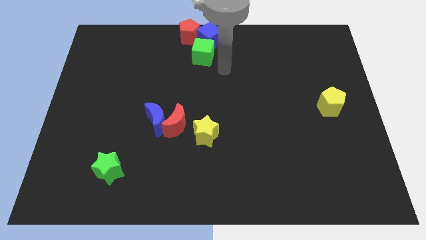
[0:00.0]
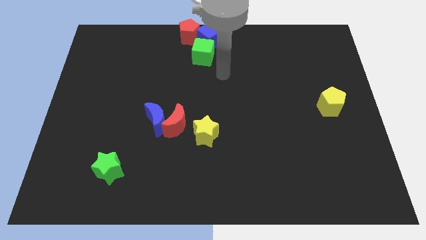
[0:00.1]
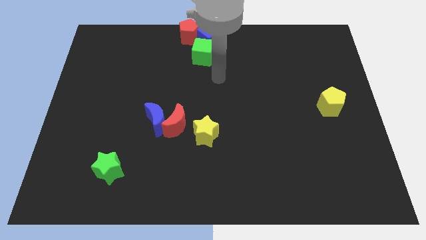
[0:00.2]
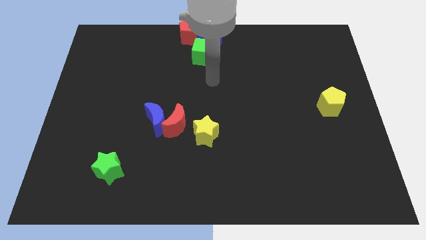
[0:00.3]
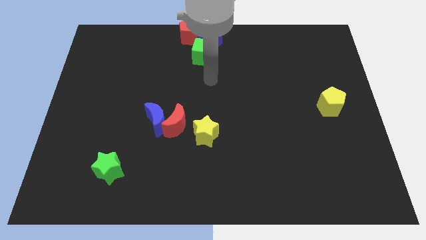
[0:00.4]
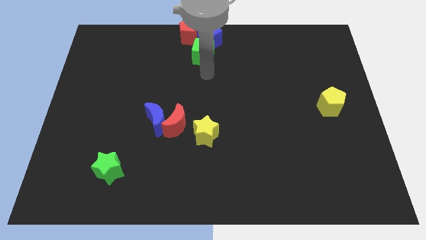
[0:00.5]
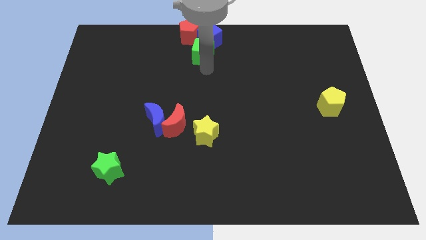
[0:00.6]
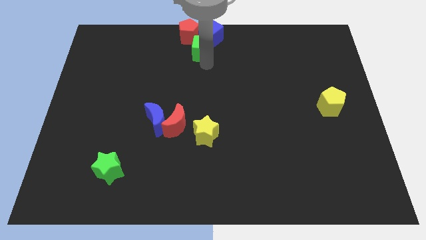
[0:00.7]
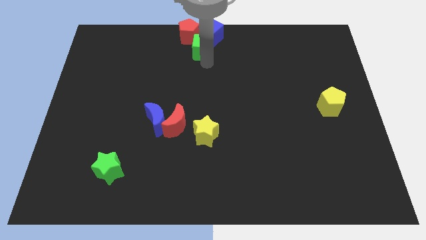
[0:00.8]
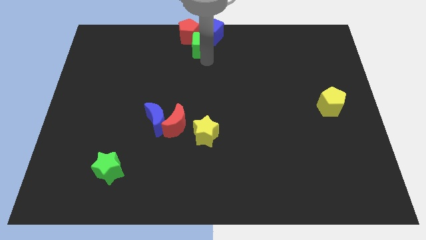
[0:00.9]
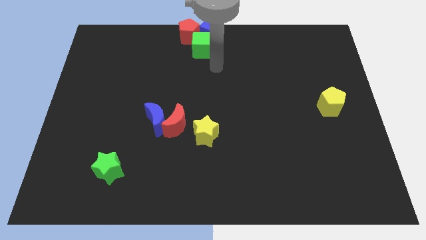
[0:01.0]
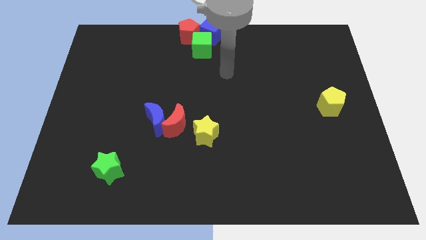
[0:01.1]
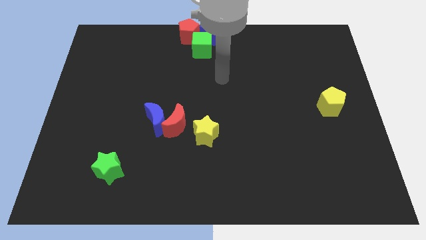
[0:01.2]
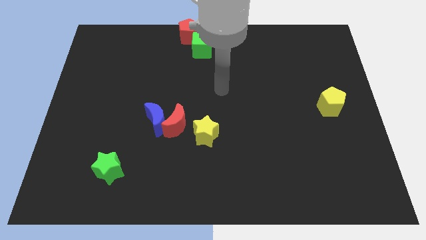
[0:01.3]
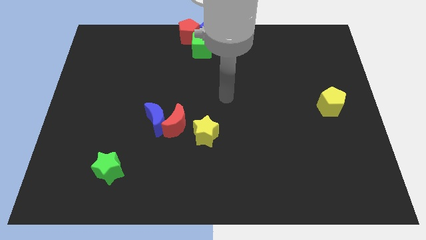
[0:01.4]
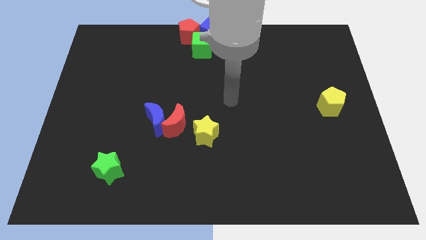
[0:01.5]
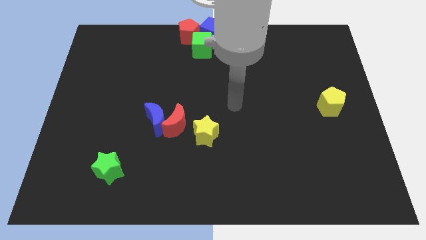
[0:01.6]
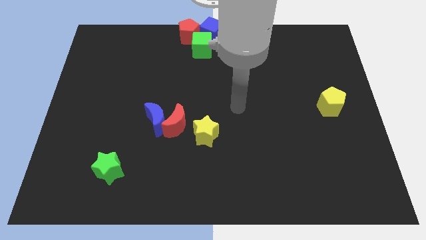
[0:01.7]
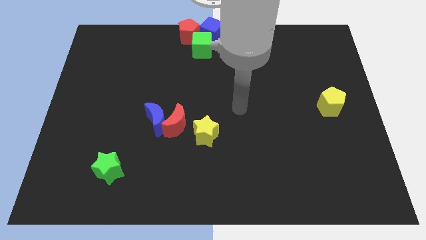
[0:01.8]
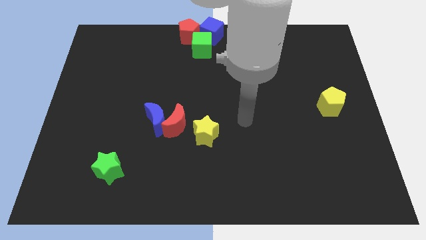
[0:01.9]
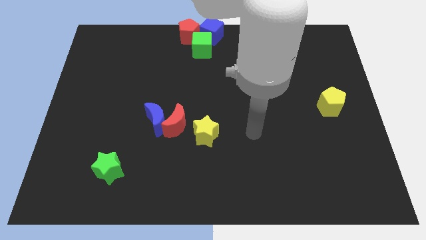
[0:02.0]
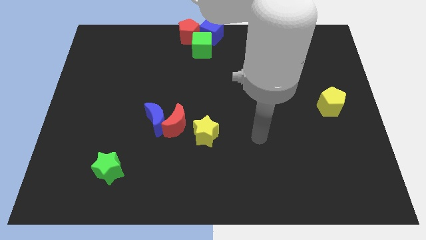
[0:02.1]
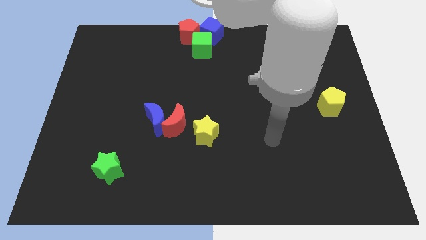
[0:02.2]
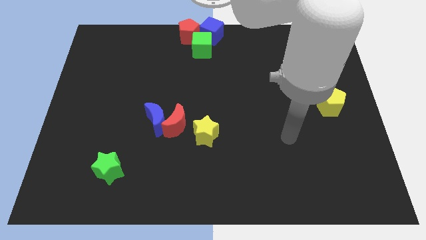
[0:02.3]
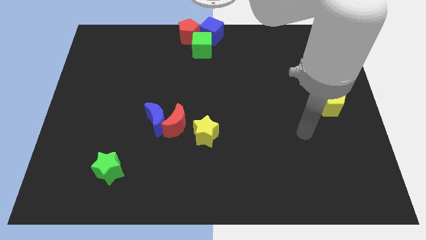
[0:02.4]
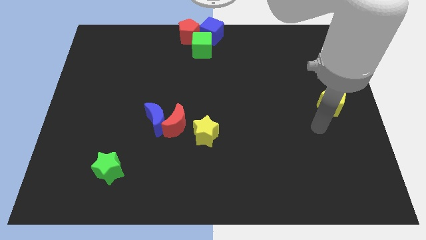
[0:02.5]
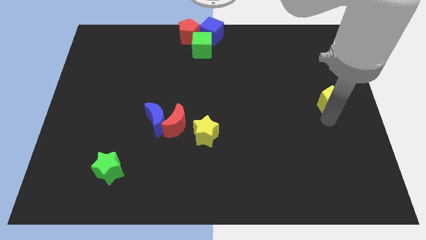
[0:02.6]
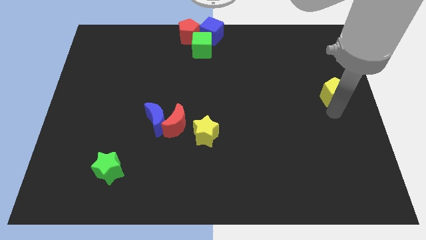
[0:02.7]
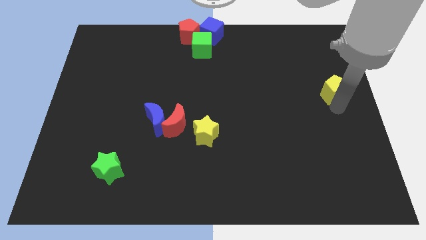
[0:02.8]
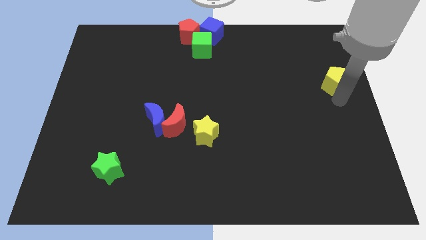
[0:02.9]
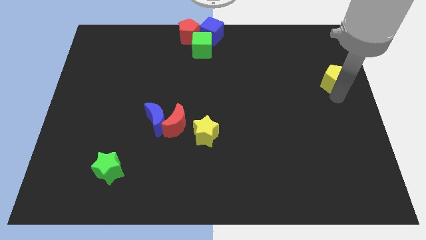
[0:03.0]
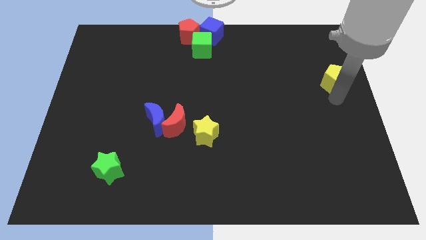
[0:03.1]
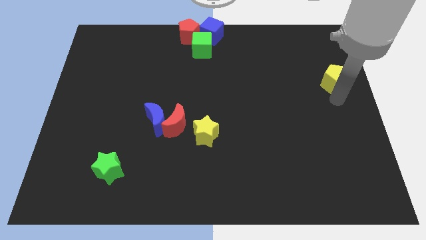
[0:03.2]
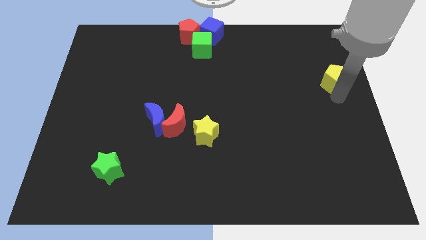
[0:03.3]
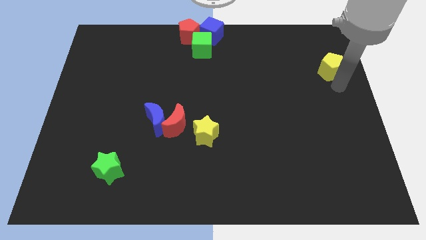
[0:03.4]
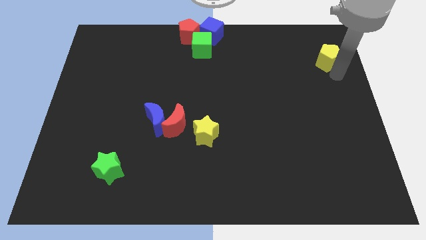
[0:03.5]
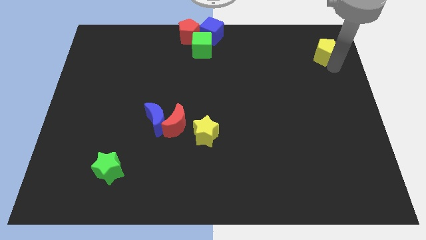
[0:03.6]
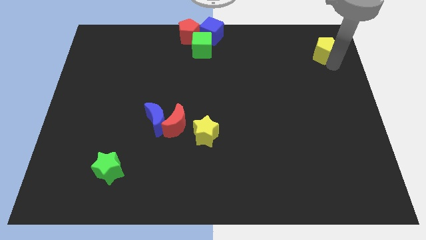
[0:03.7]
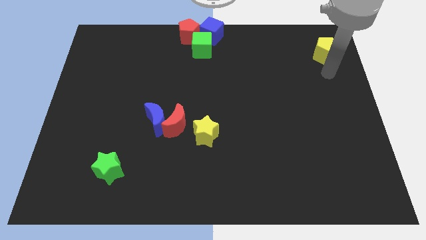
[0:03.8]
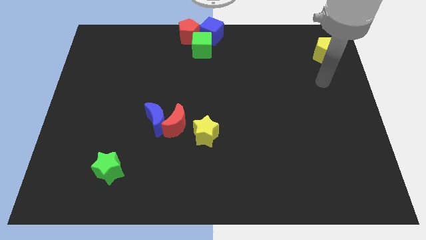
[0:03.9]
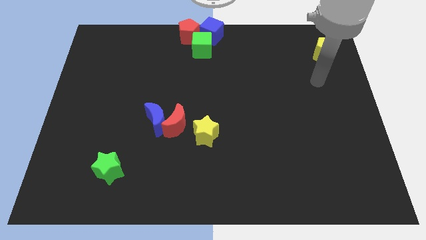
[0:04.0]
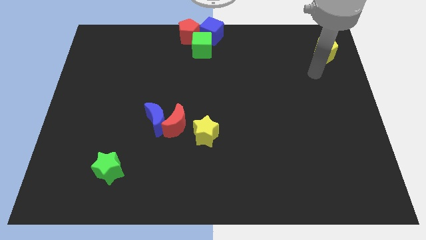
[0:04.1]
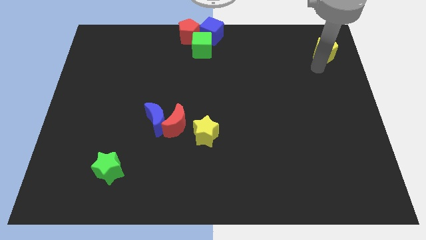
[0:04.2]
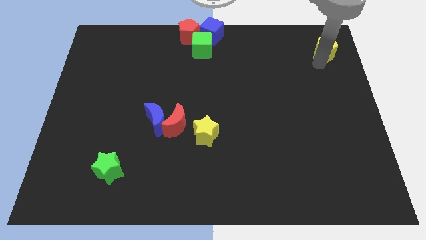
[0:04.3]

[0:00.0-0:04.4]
move the yellow pentagon towards the top right

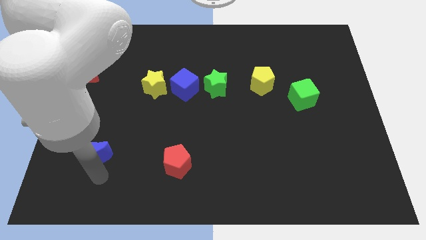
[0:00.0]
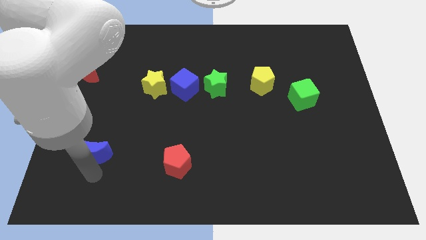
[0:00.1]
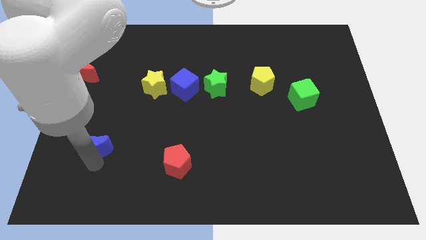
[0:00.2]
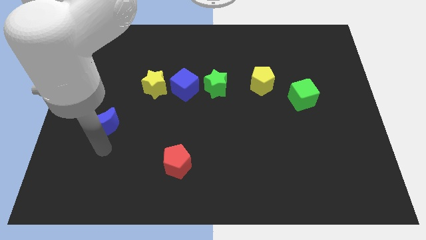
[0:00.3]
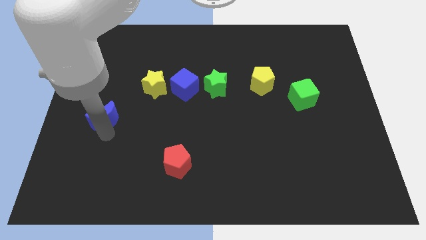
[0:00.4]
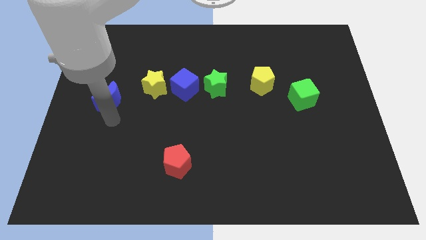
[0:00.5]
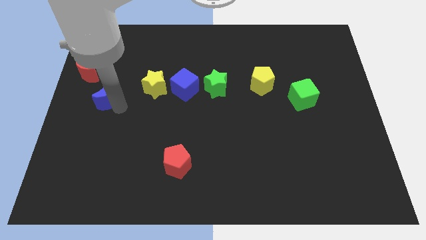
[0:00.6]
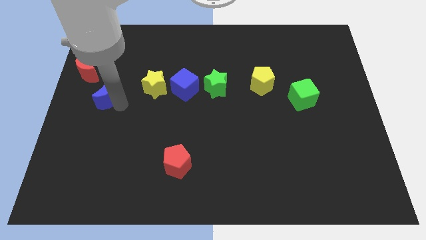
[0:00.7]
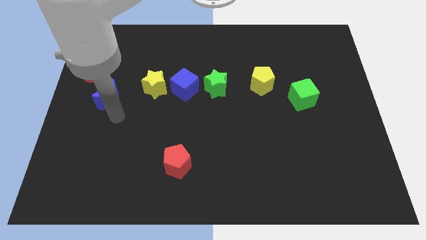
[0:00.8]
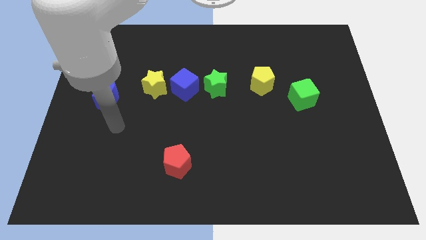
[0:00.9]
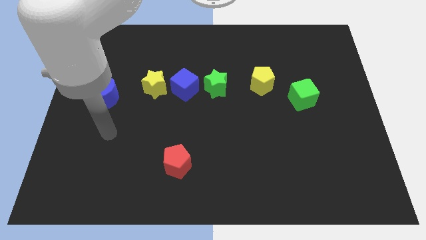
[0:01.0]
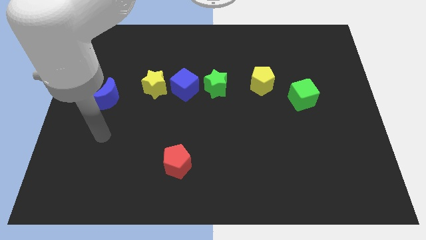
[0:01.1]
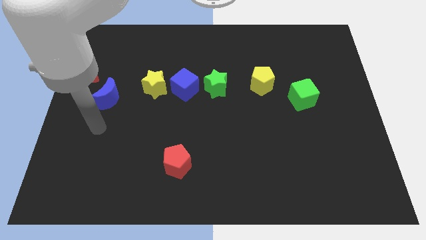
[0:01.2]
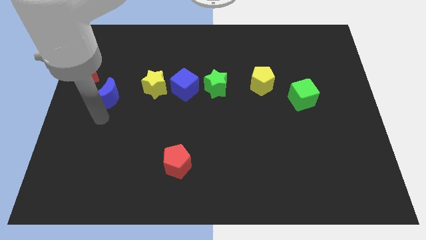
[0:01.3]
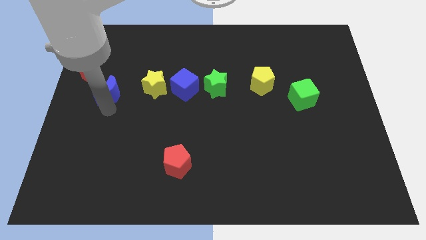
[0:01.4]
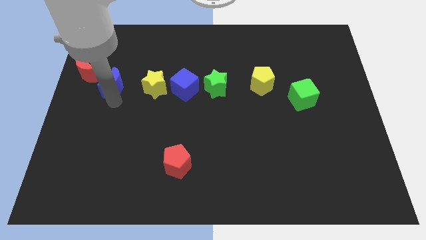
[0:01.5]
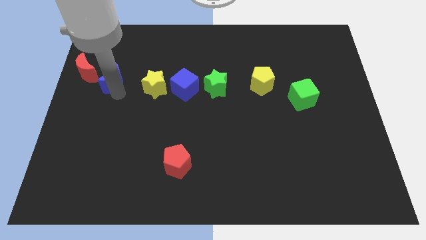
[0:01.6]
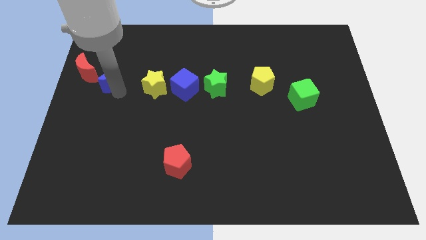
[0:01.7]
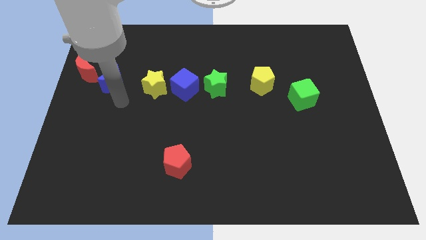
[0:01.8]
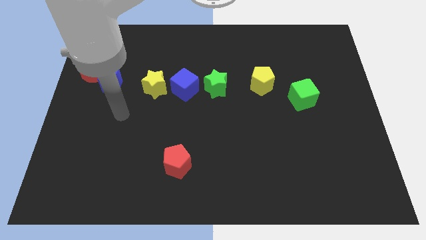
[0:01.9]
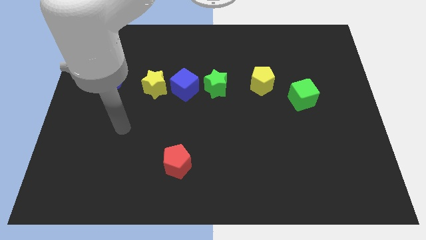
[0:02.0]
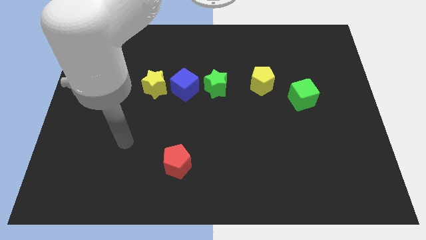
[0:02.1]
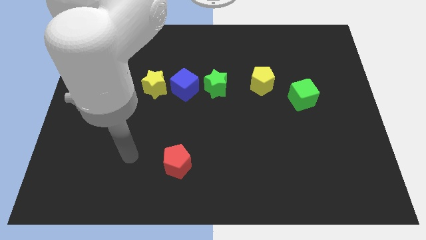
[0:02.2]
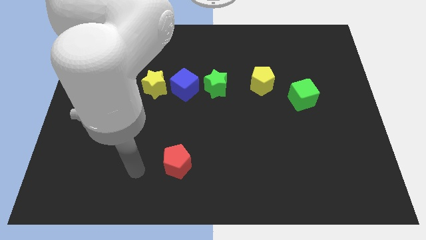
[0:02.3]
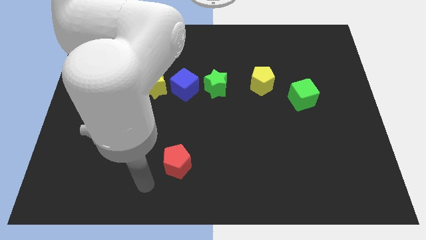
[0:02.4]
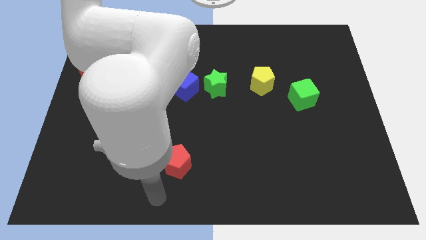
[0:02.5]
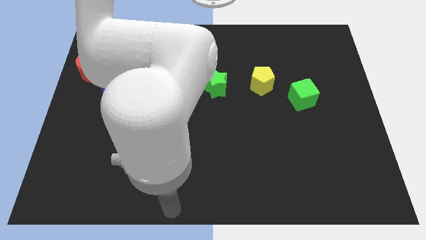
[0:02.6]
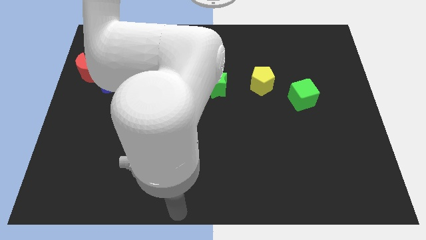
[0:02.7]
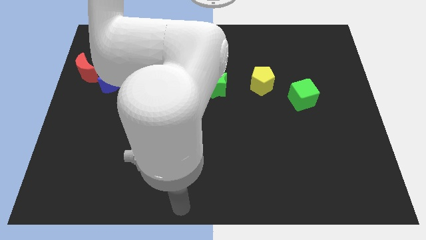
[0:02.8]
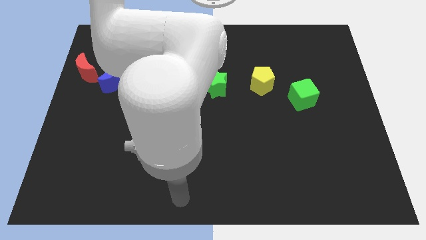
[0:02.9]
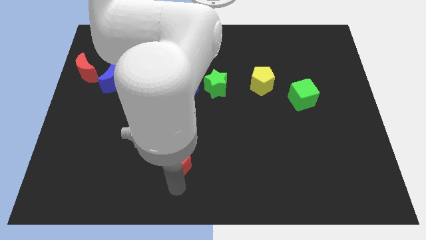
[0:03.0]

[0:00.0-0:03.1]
place the blue crescent to the right of red crescent

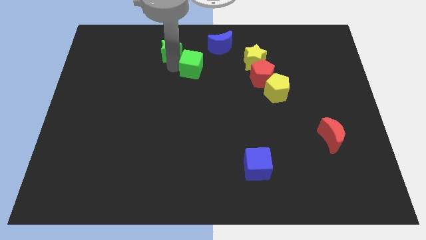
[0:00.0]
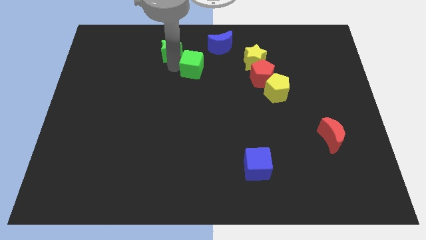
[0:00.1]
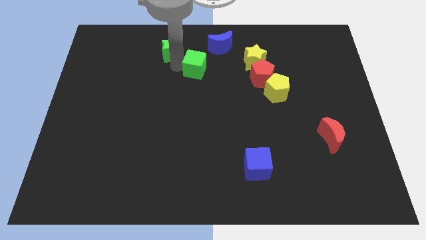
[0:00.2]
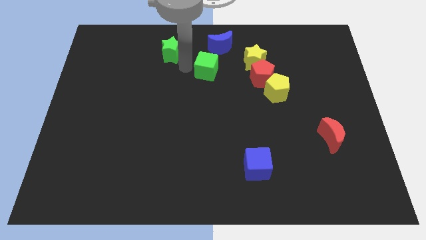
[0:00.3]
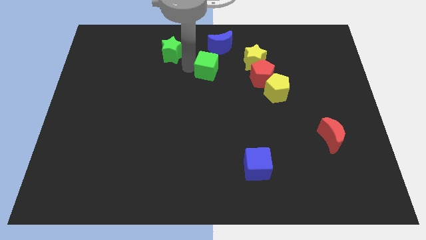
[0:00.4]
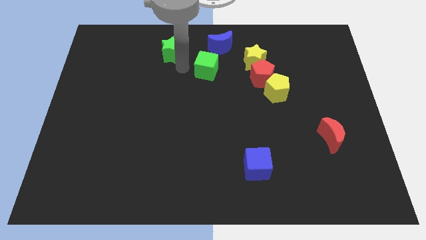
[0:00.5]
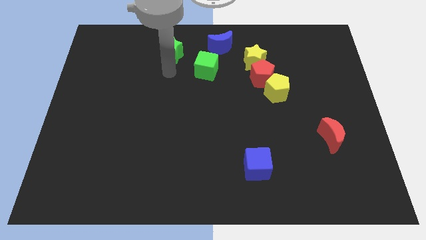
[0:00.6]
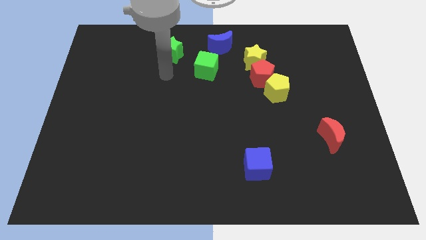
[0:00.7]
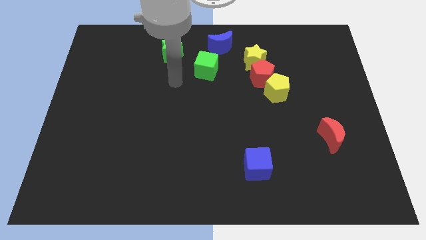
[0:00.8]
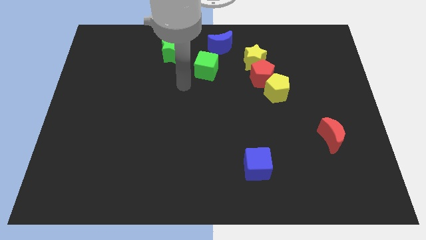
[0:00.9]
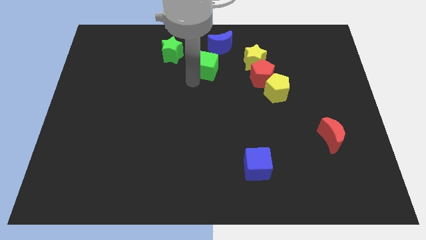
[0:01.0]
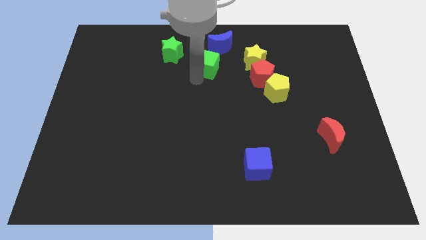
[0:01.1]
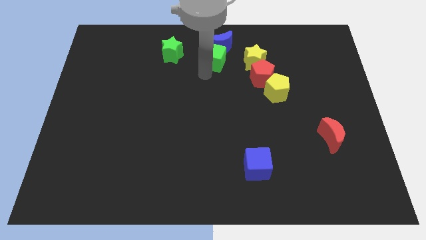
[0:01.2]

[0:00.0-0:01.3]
move the green cube to the bottom of the blue crescent

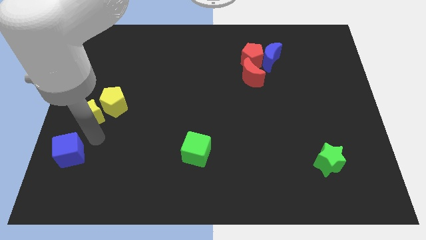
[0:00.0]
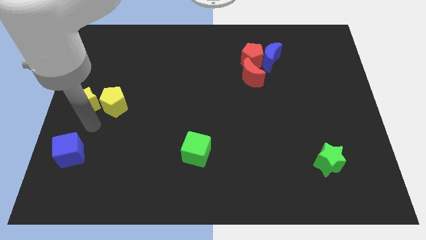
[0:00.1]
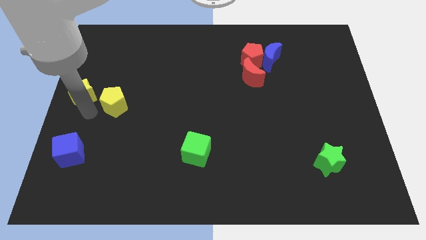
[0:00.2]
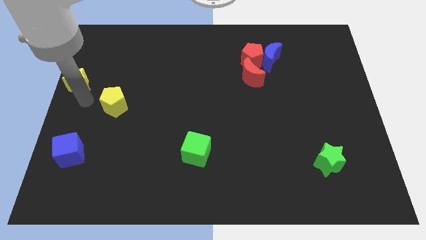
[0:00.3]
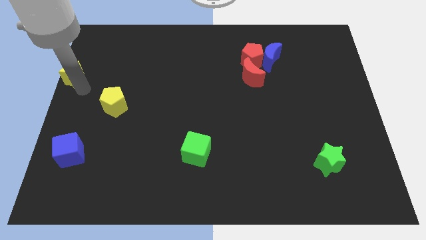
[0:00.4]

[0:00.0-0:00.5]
push the yellow star to the top left of the board
